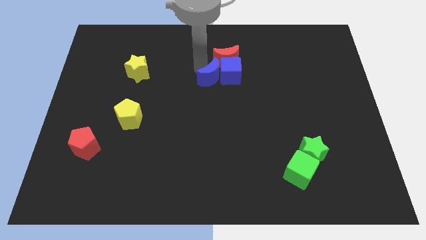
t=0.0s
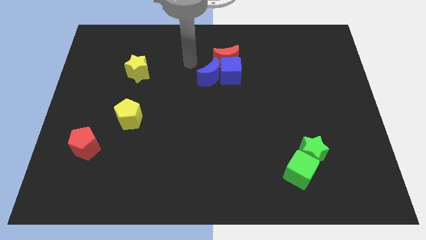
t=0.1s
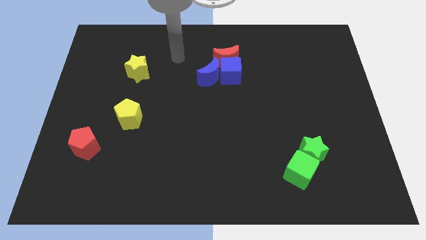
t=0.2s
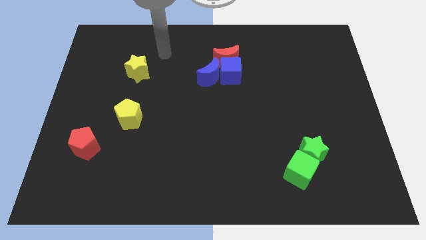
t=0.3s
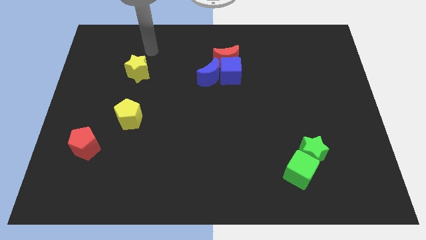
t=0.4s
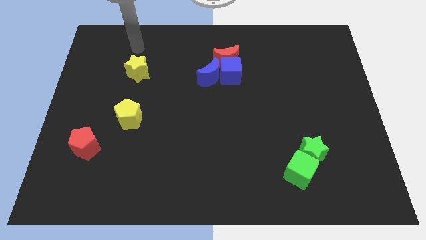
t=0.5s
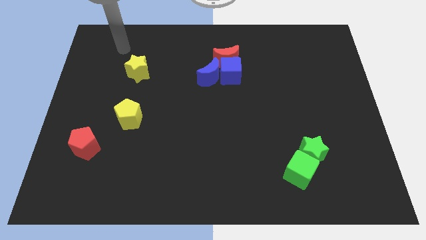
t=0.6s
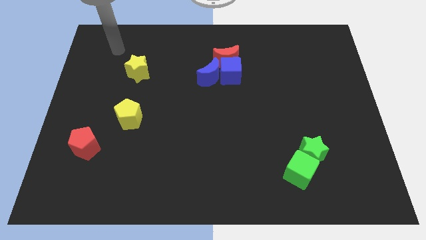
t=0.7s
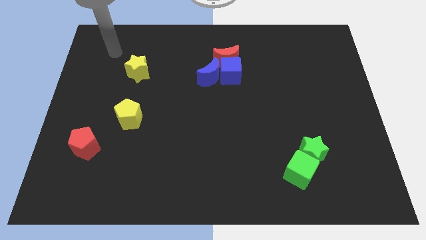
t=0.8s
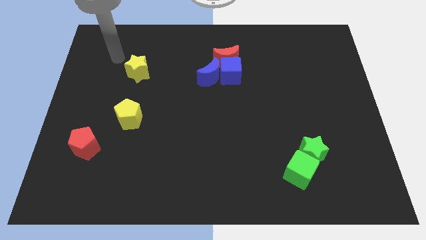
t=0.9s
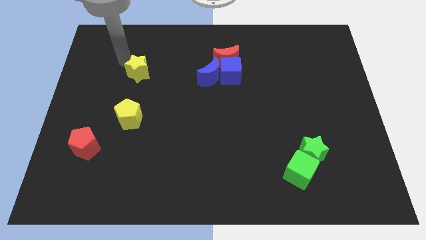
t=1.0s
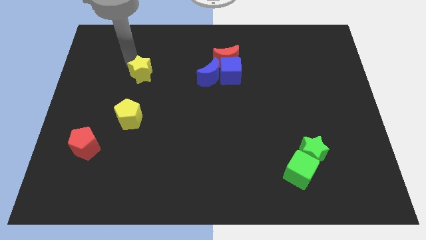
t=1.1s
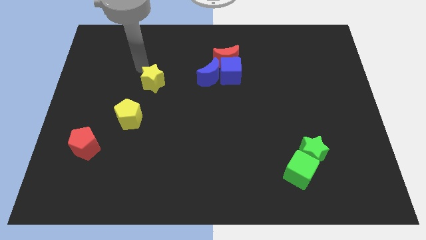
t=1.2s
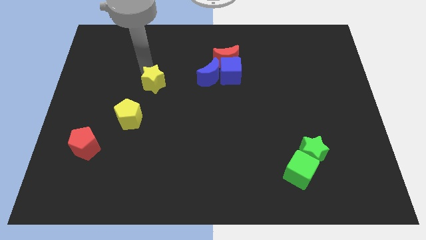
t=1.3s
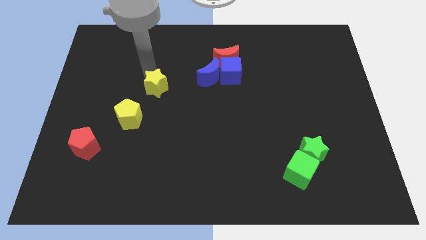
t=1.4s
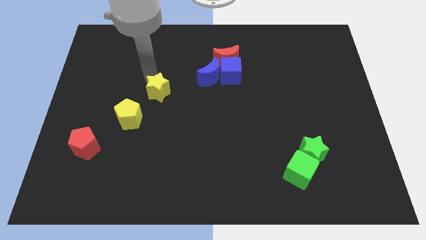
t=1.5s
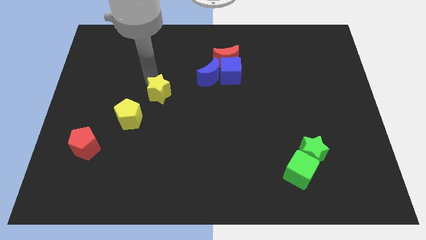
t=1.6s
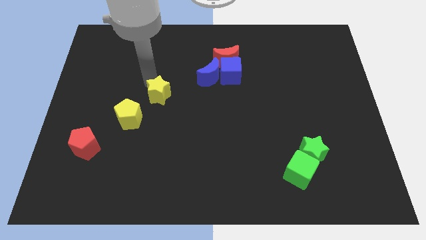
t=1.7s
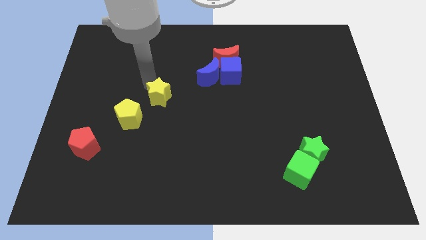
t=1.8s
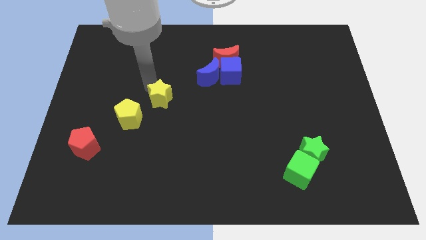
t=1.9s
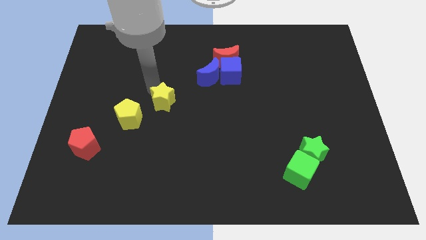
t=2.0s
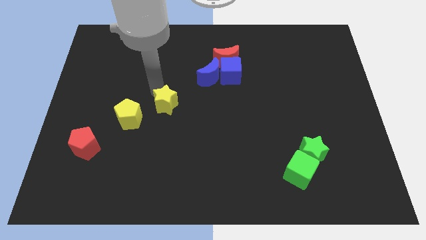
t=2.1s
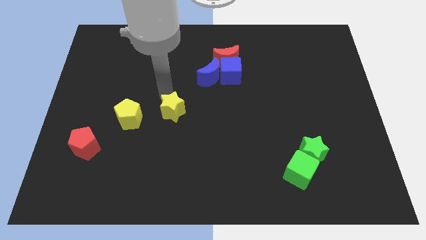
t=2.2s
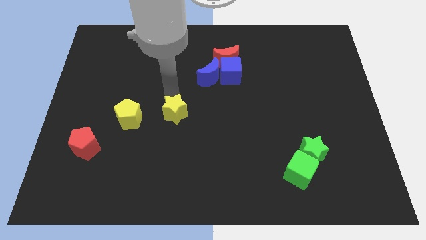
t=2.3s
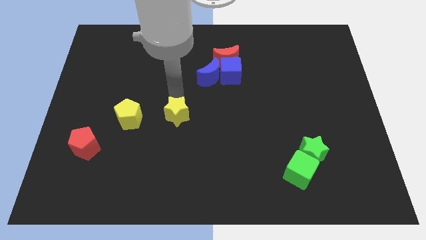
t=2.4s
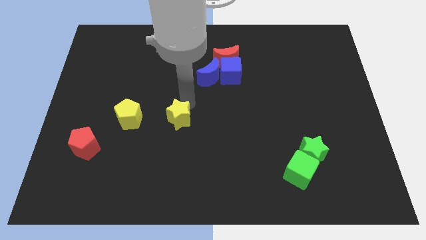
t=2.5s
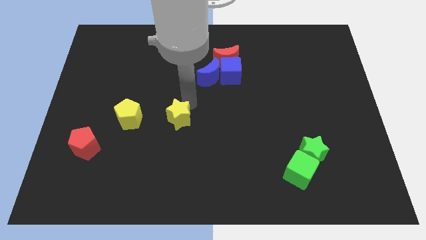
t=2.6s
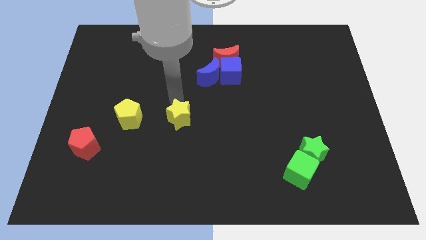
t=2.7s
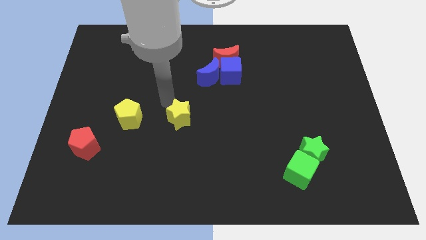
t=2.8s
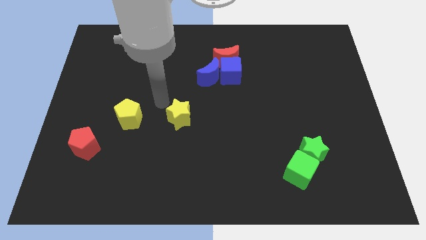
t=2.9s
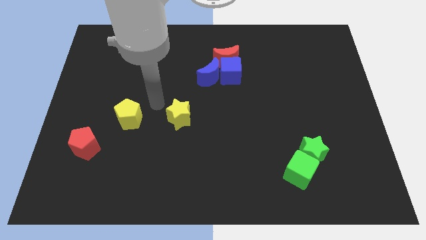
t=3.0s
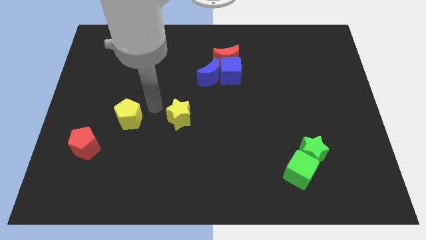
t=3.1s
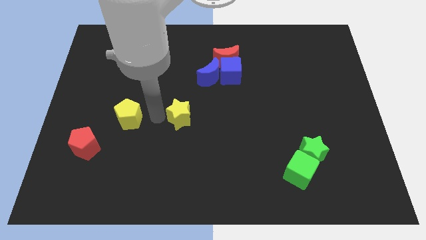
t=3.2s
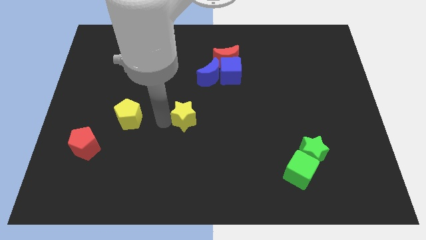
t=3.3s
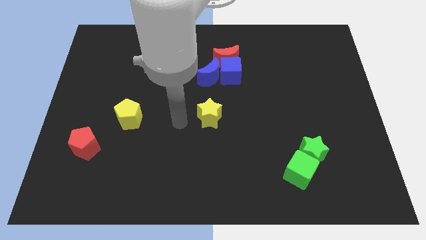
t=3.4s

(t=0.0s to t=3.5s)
place the yellow star below the blue moon

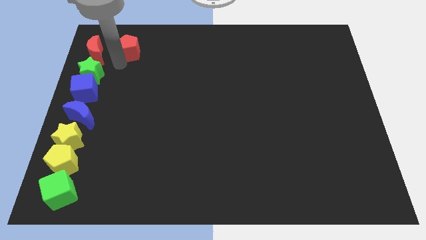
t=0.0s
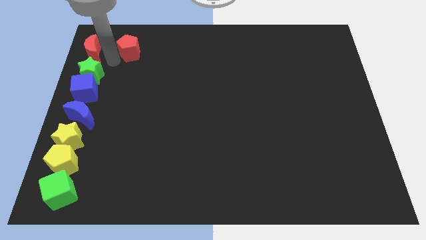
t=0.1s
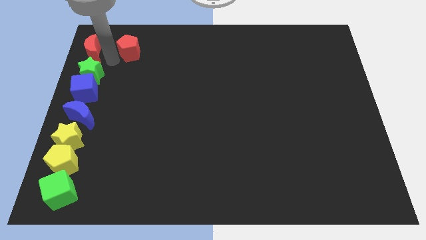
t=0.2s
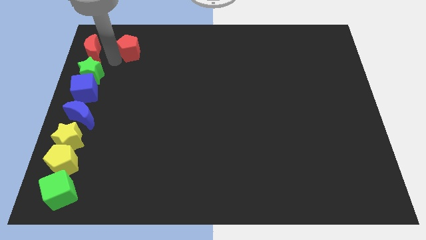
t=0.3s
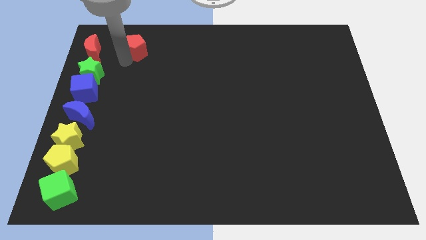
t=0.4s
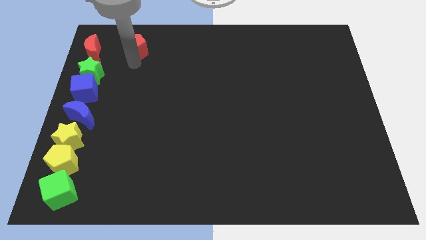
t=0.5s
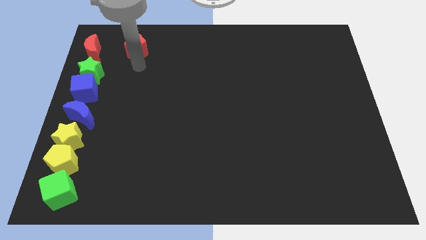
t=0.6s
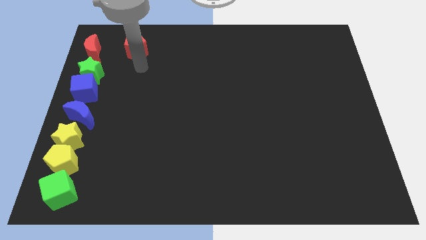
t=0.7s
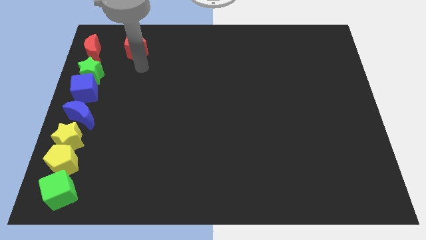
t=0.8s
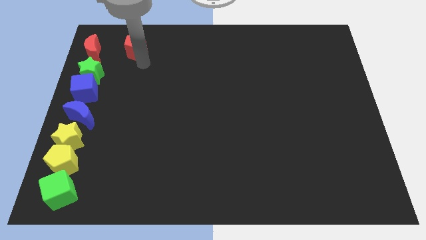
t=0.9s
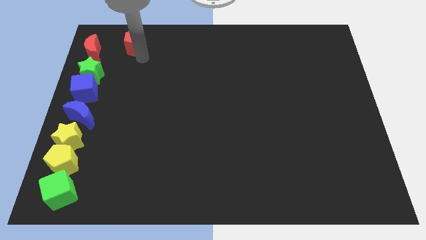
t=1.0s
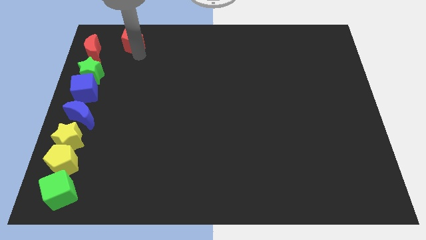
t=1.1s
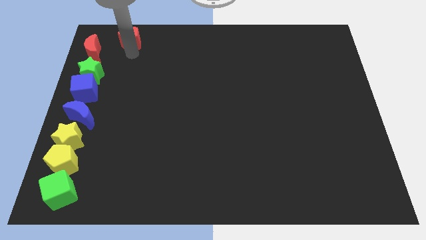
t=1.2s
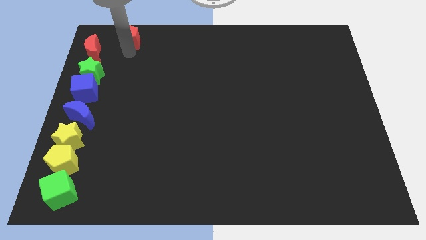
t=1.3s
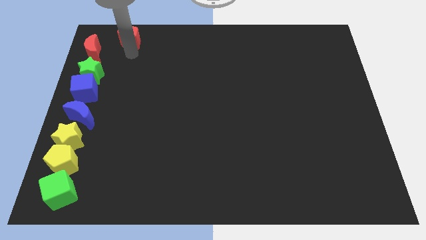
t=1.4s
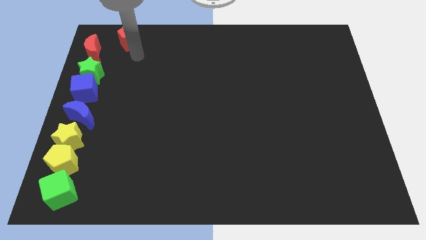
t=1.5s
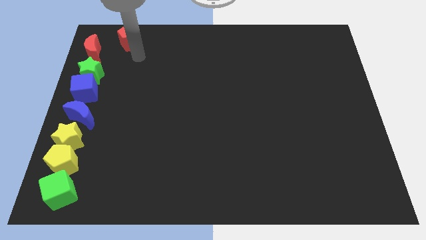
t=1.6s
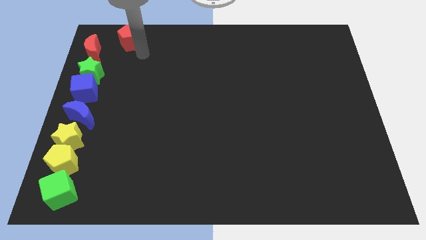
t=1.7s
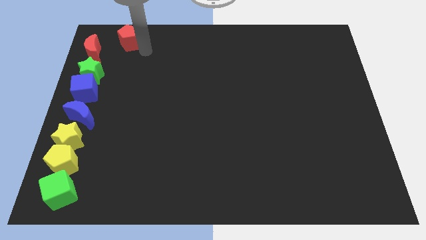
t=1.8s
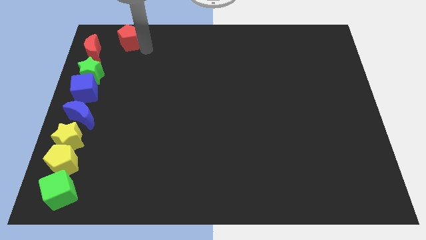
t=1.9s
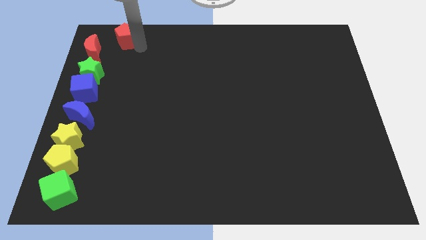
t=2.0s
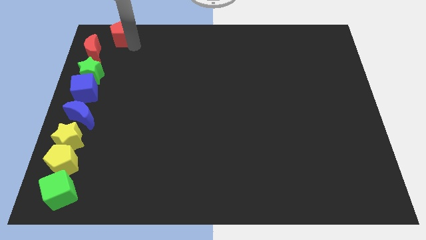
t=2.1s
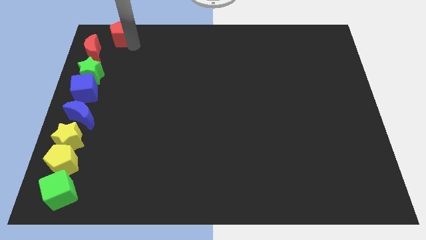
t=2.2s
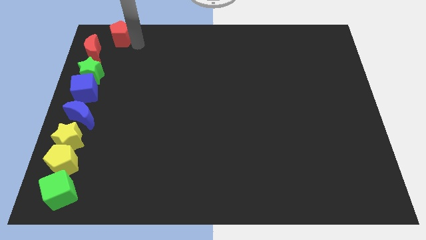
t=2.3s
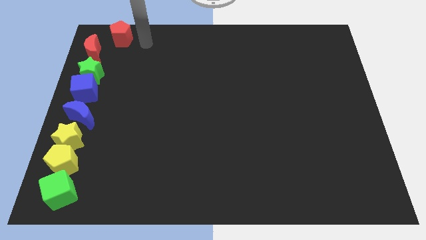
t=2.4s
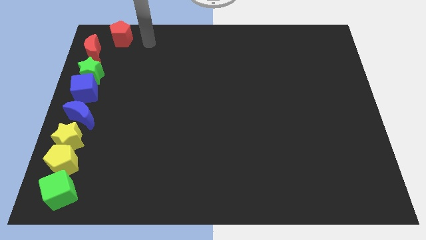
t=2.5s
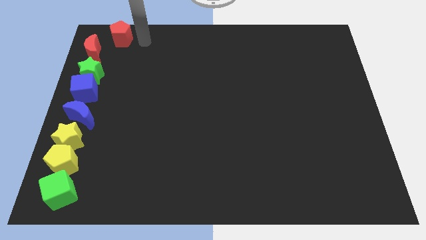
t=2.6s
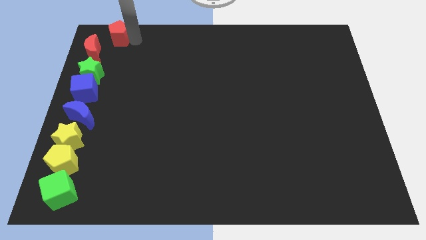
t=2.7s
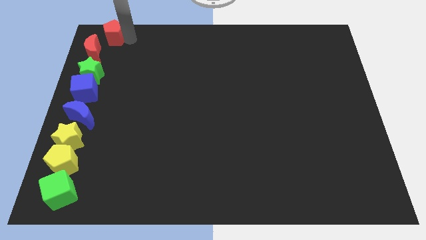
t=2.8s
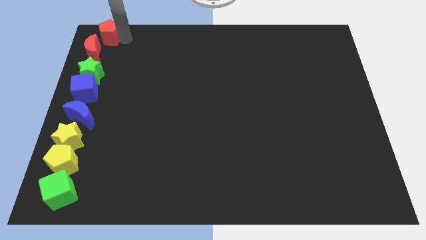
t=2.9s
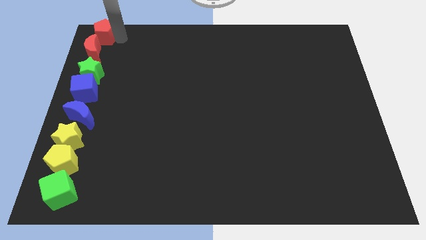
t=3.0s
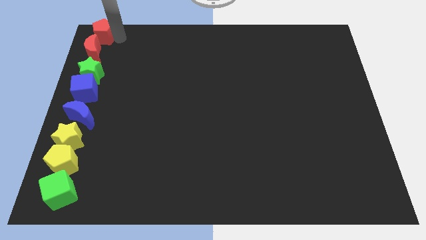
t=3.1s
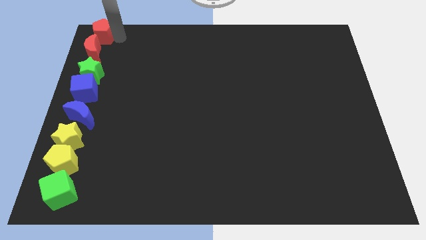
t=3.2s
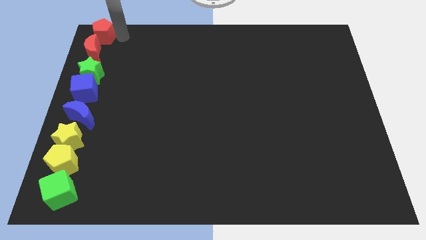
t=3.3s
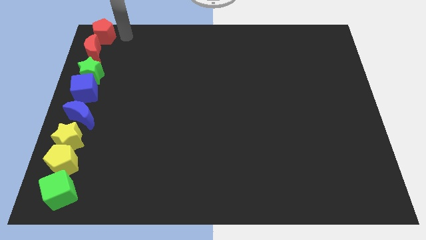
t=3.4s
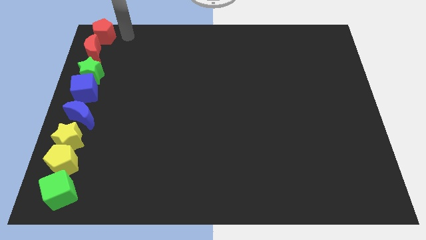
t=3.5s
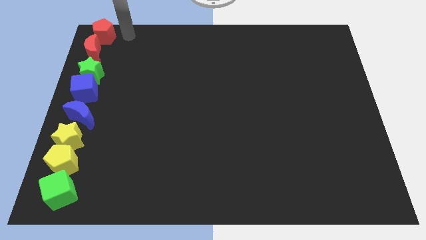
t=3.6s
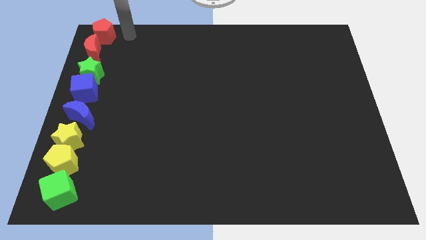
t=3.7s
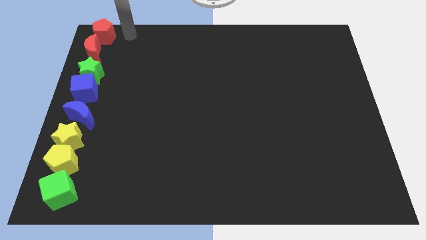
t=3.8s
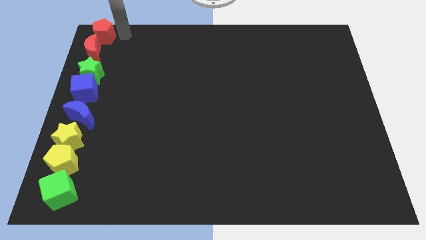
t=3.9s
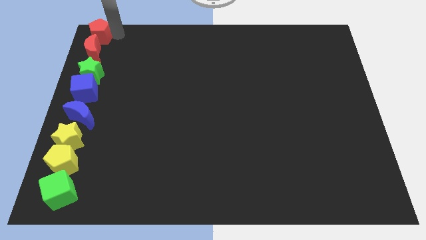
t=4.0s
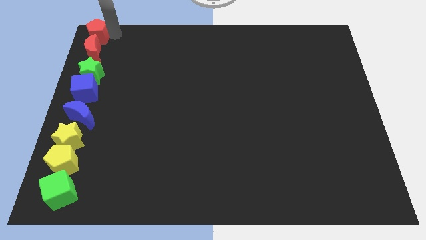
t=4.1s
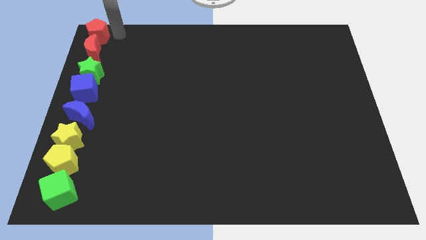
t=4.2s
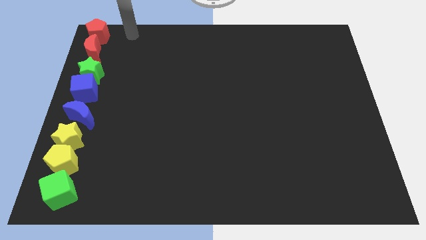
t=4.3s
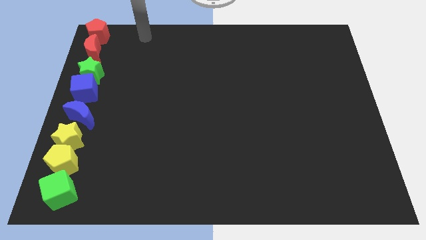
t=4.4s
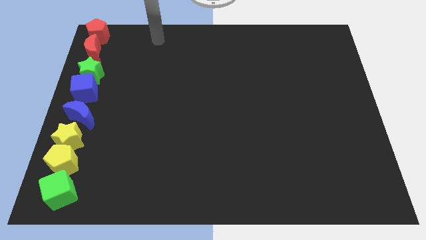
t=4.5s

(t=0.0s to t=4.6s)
move red pentagon to the top left

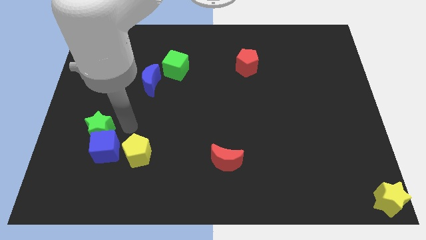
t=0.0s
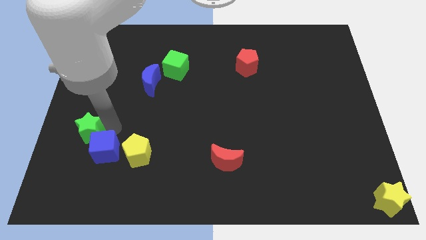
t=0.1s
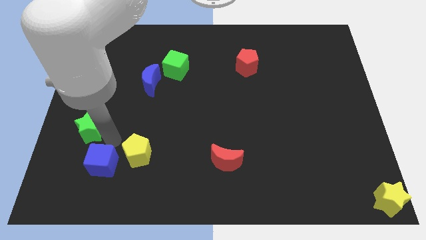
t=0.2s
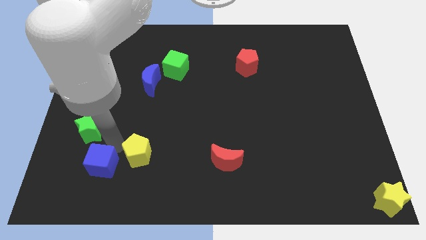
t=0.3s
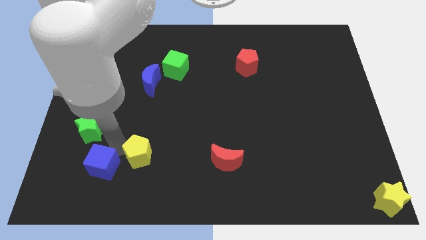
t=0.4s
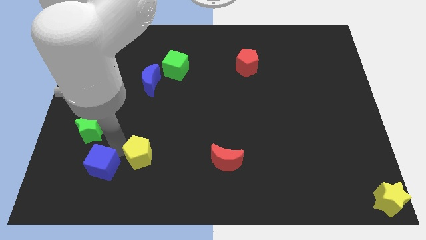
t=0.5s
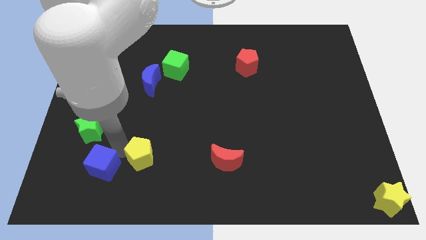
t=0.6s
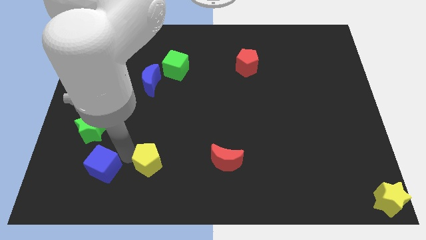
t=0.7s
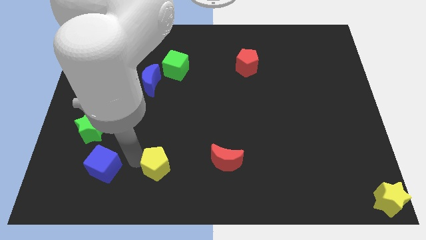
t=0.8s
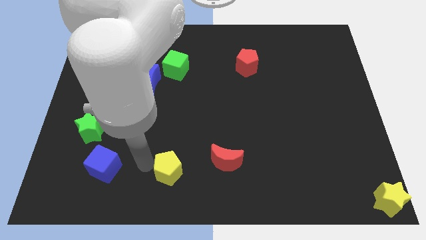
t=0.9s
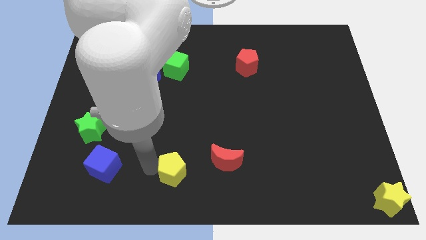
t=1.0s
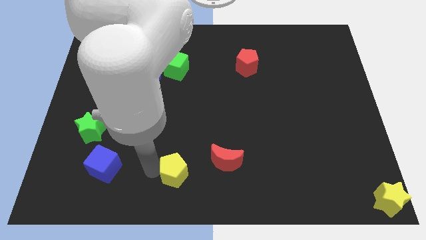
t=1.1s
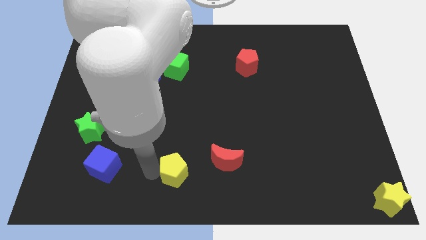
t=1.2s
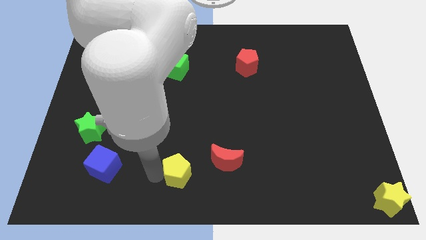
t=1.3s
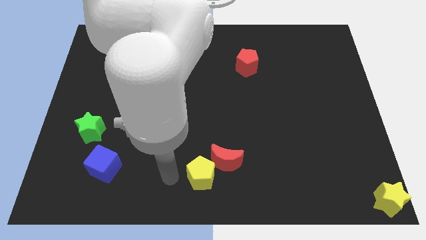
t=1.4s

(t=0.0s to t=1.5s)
push the blue cube towards down
